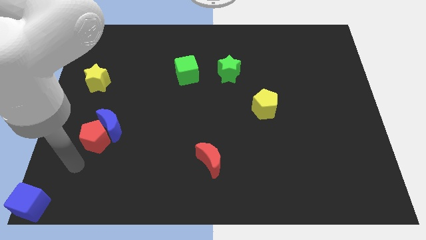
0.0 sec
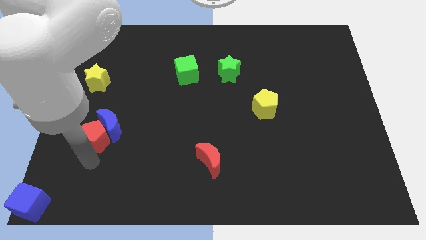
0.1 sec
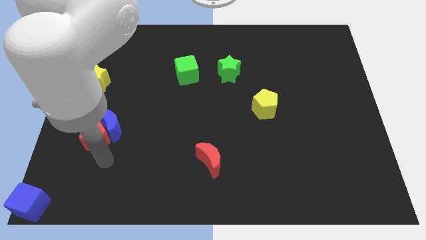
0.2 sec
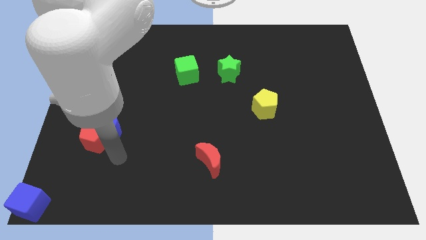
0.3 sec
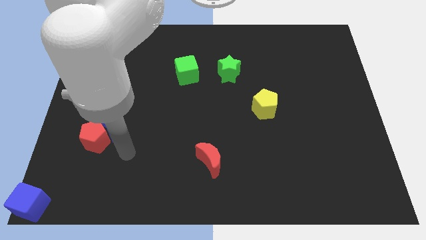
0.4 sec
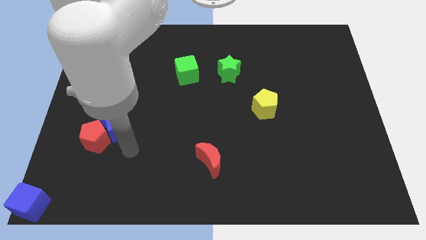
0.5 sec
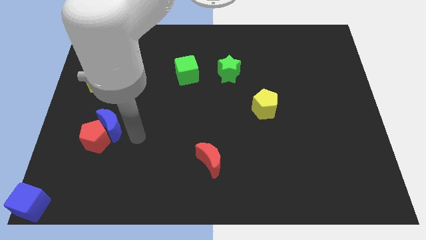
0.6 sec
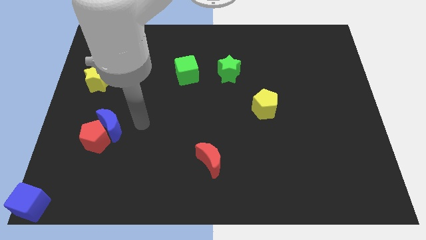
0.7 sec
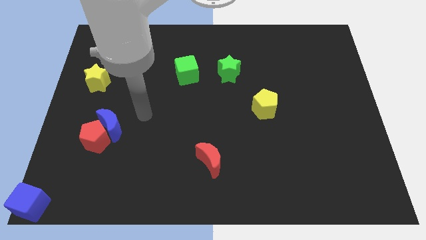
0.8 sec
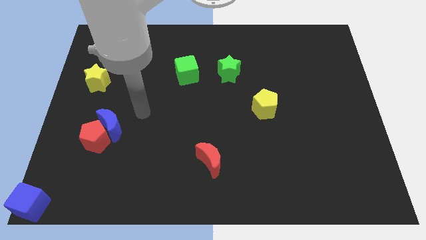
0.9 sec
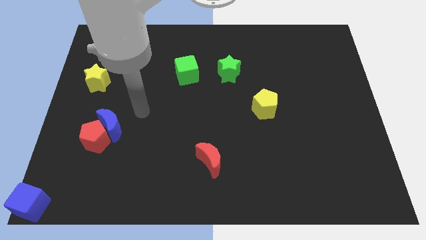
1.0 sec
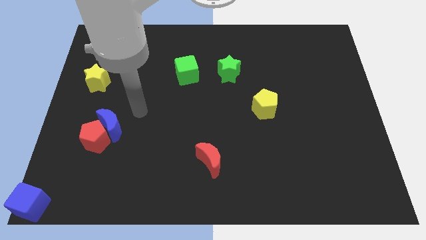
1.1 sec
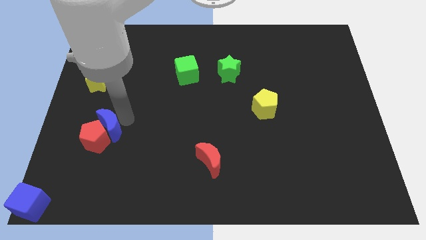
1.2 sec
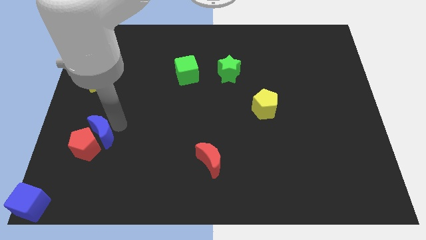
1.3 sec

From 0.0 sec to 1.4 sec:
move your arm to the right of the blue crescent

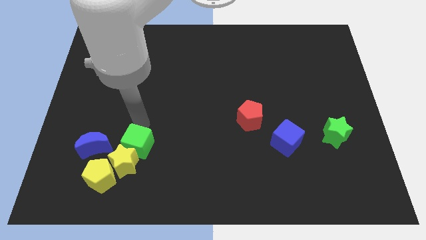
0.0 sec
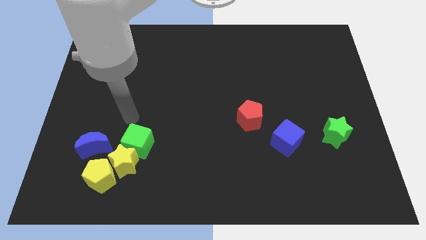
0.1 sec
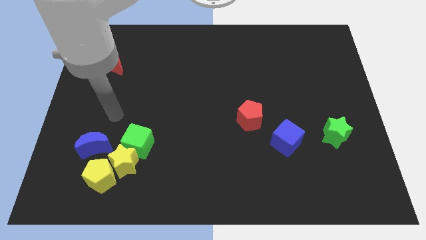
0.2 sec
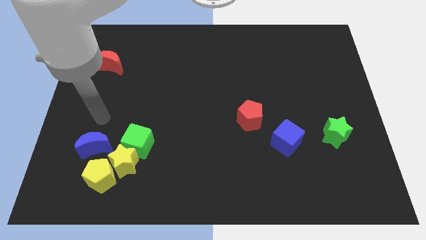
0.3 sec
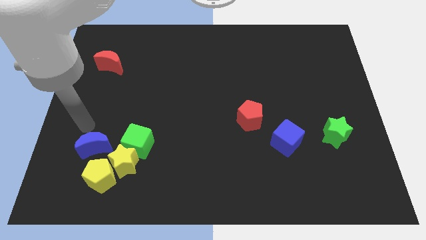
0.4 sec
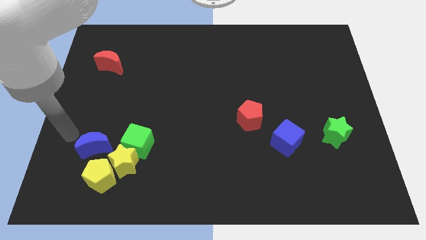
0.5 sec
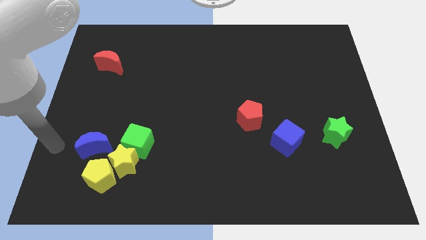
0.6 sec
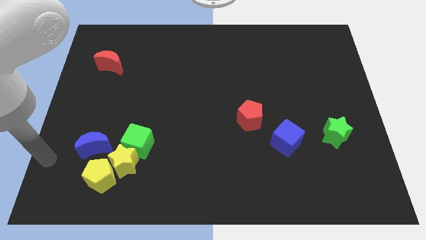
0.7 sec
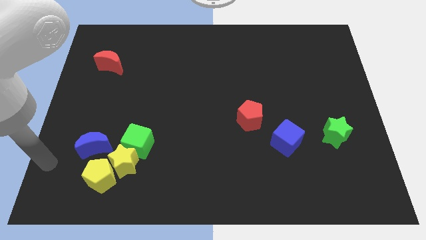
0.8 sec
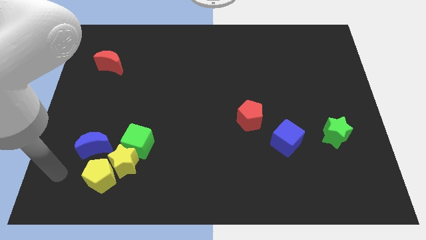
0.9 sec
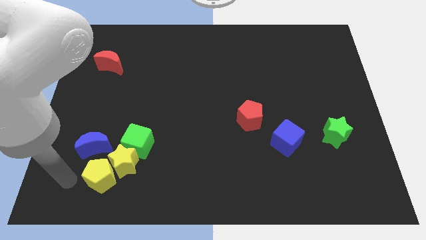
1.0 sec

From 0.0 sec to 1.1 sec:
move your arm away from green cube

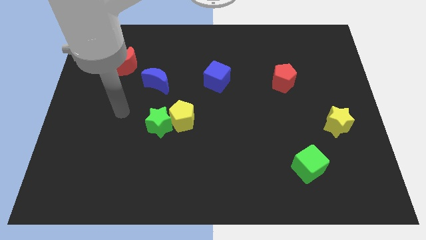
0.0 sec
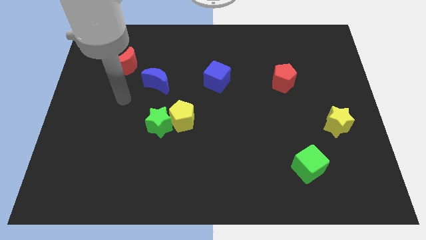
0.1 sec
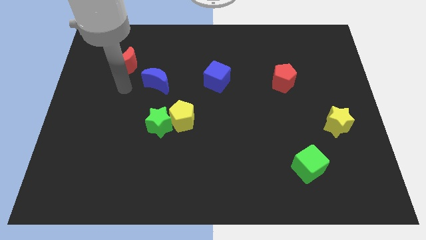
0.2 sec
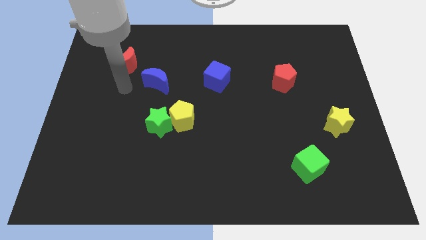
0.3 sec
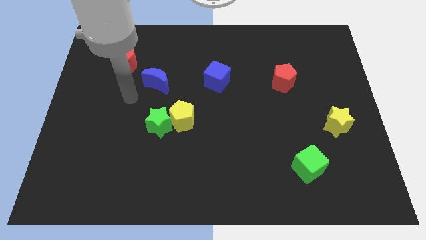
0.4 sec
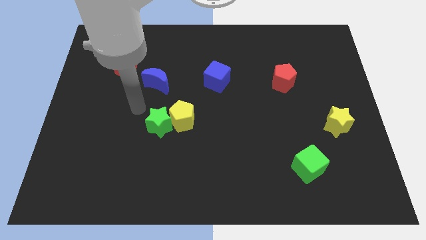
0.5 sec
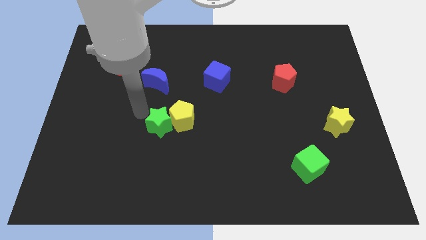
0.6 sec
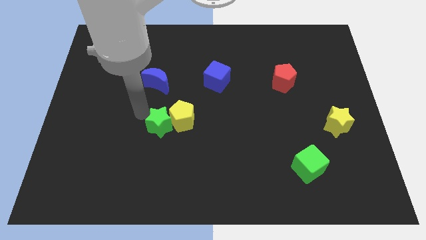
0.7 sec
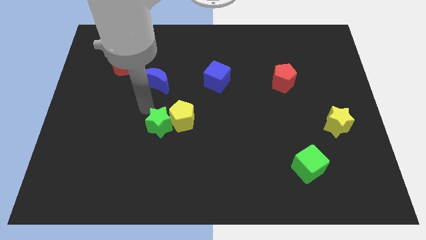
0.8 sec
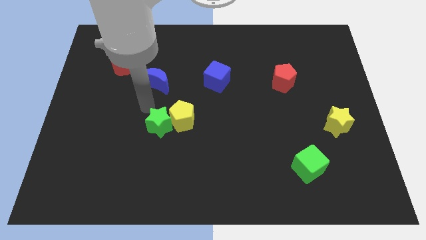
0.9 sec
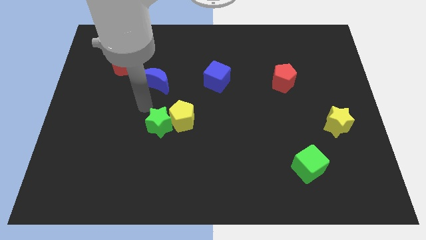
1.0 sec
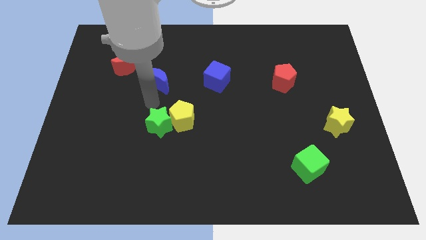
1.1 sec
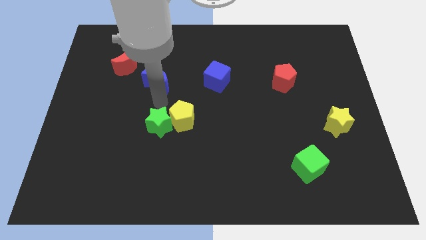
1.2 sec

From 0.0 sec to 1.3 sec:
point your arm at the top of green star

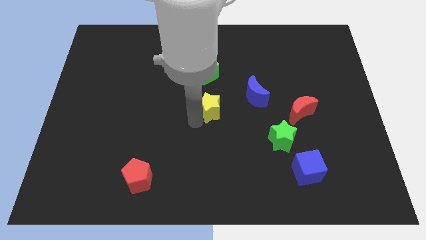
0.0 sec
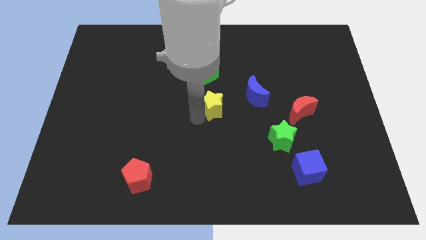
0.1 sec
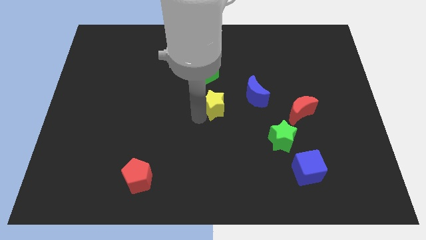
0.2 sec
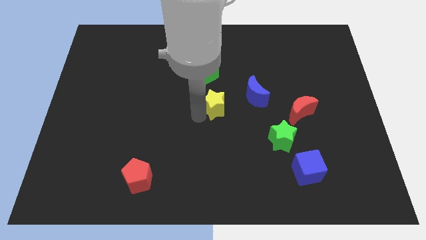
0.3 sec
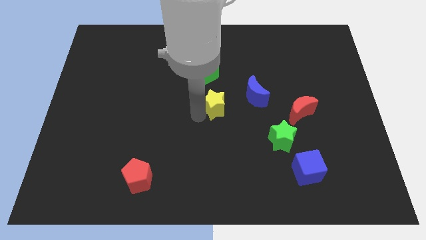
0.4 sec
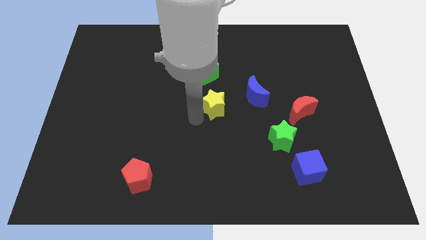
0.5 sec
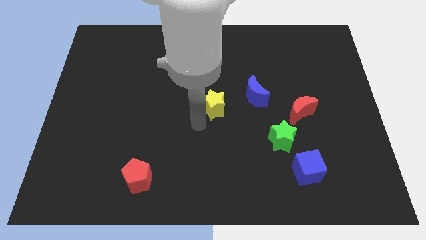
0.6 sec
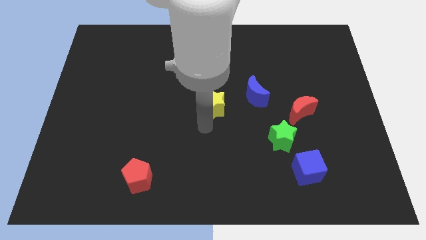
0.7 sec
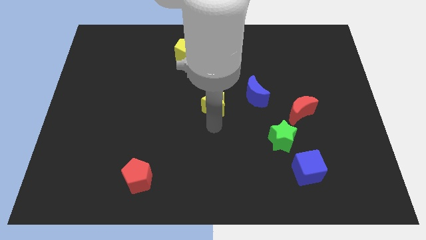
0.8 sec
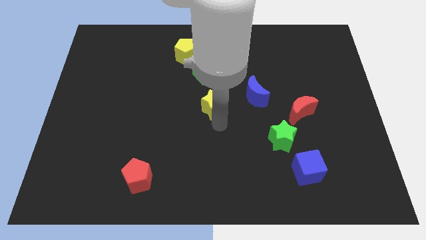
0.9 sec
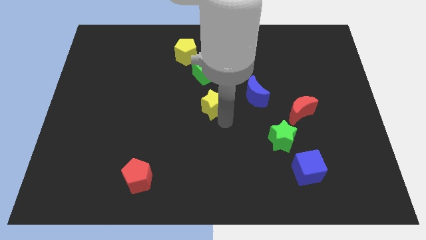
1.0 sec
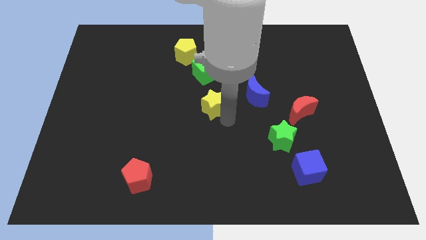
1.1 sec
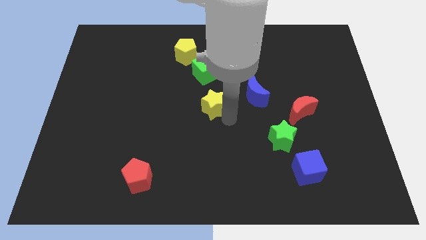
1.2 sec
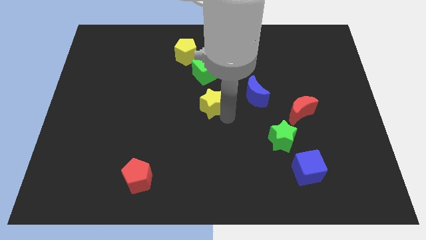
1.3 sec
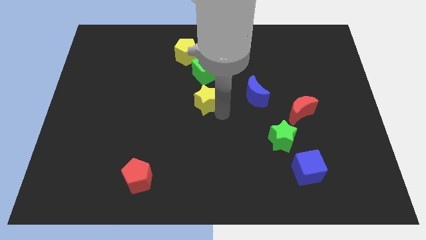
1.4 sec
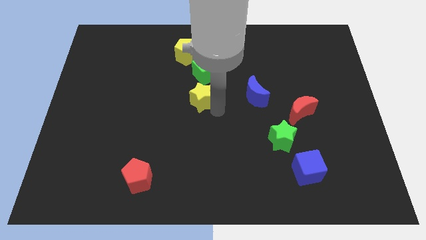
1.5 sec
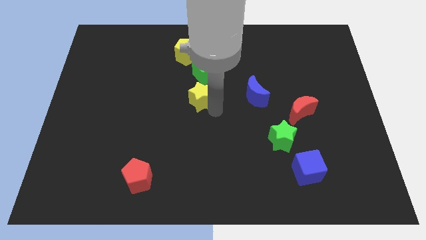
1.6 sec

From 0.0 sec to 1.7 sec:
move the yellow star to the bottom of the green cube

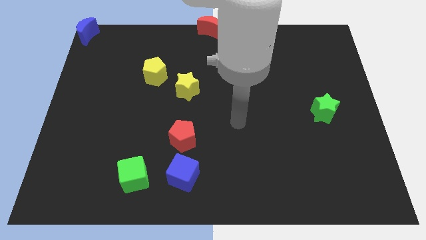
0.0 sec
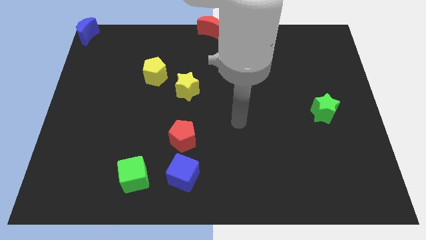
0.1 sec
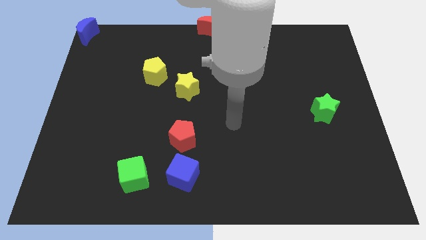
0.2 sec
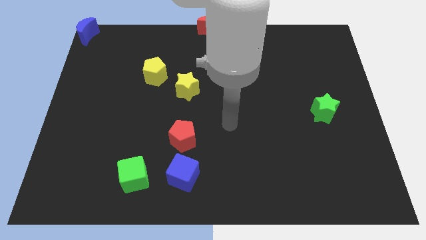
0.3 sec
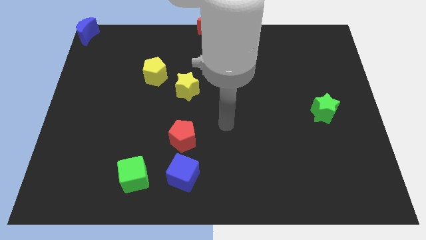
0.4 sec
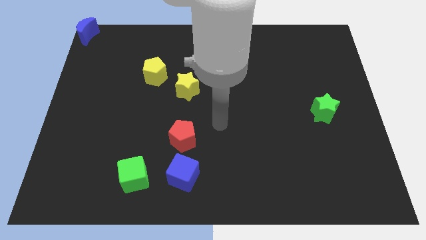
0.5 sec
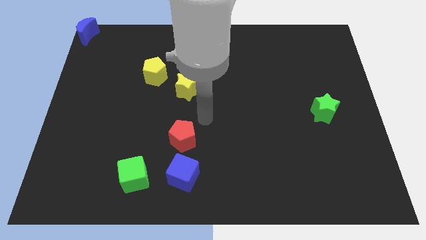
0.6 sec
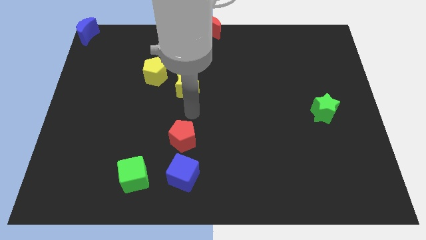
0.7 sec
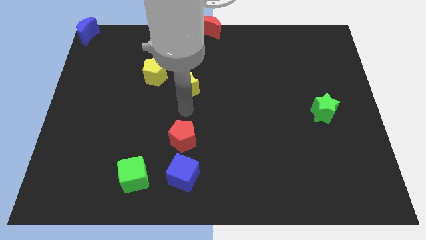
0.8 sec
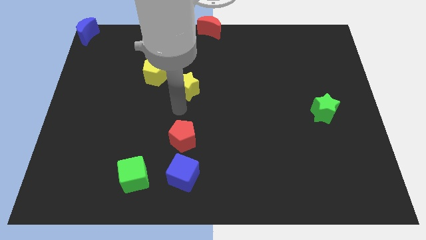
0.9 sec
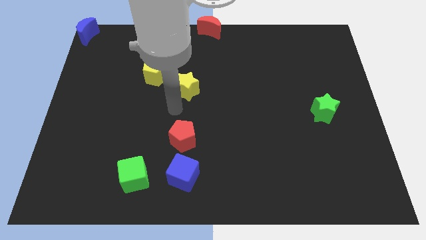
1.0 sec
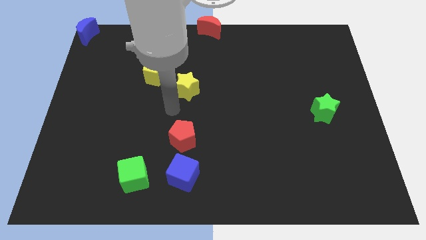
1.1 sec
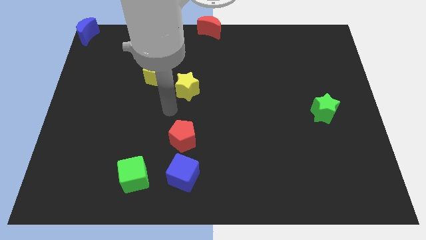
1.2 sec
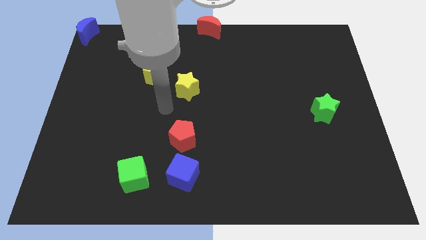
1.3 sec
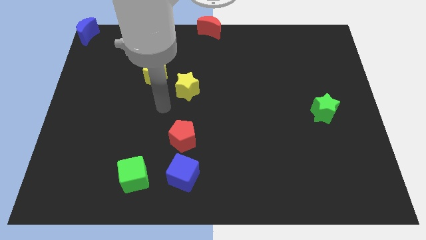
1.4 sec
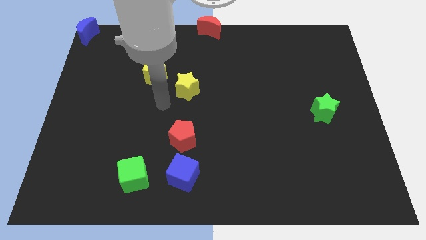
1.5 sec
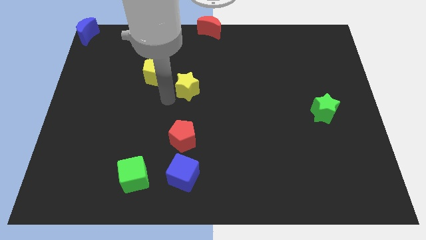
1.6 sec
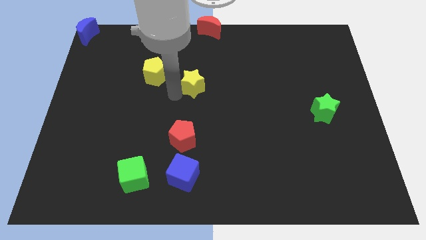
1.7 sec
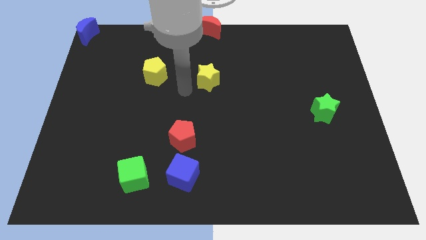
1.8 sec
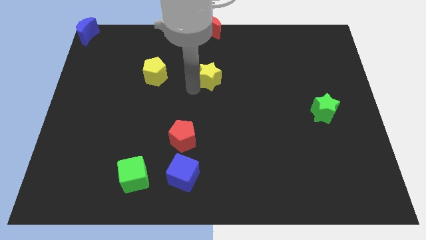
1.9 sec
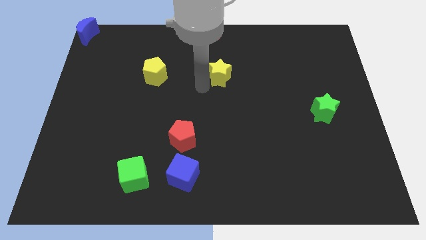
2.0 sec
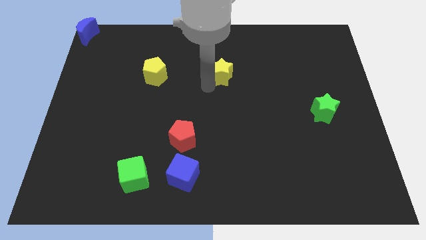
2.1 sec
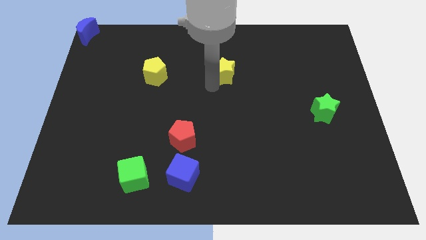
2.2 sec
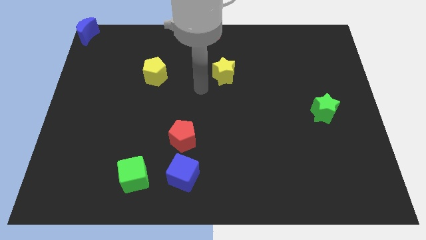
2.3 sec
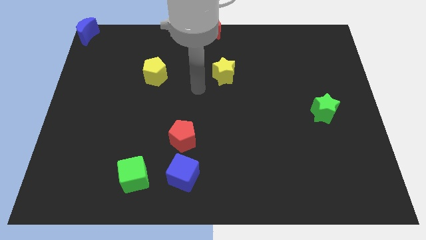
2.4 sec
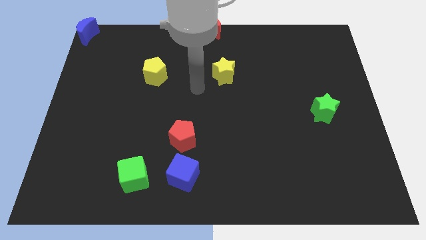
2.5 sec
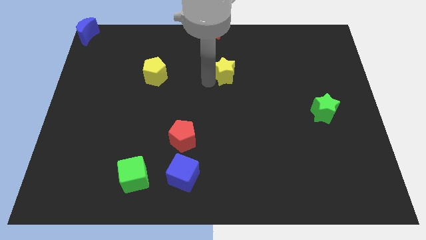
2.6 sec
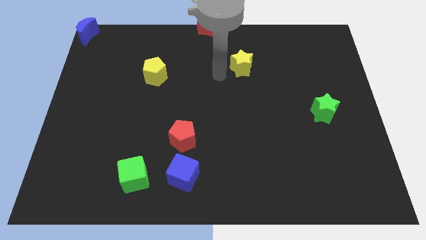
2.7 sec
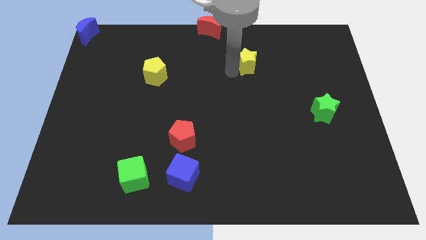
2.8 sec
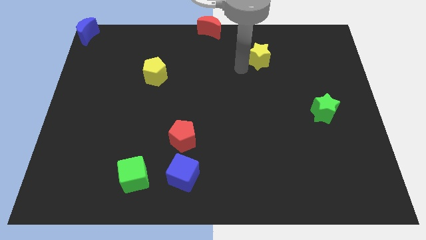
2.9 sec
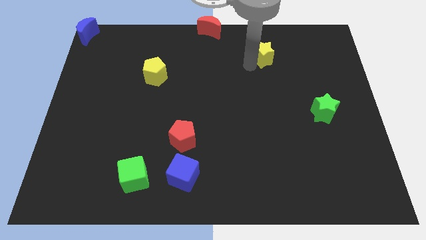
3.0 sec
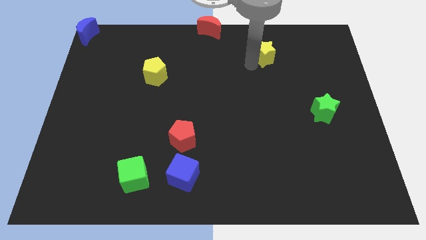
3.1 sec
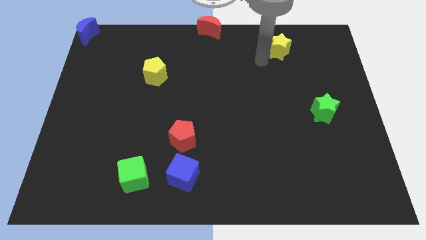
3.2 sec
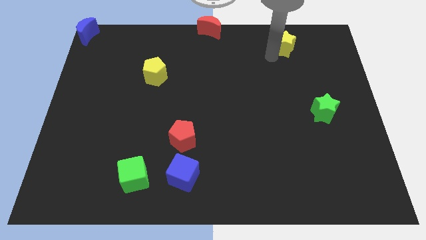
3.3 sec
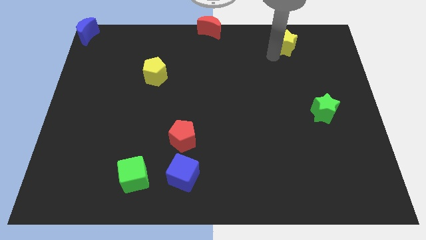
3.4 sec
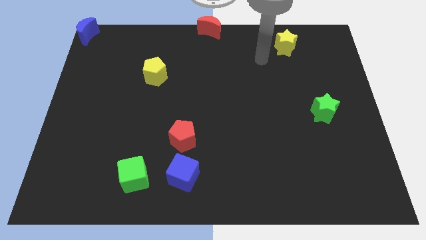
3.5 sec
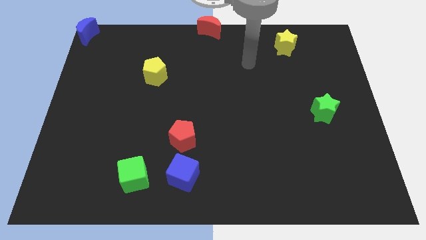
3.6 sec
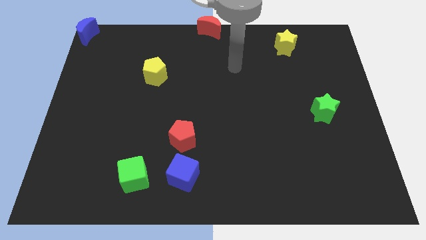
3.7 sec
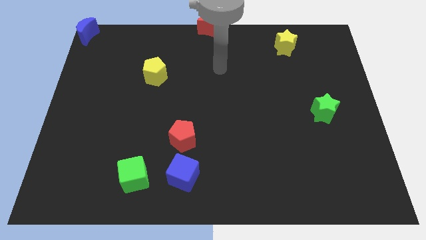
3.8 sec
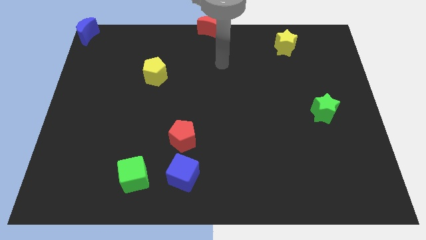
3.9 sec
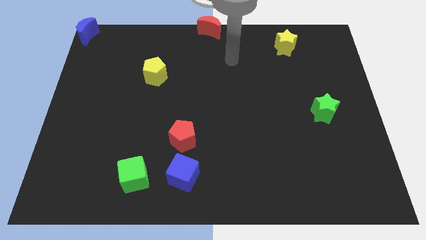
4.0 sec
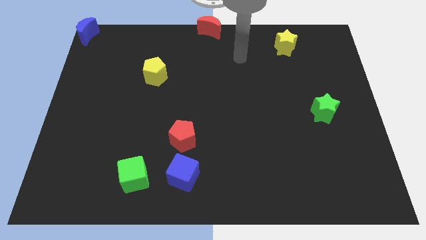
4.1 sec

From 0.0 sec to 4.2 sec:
push the yellow star towards the top right
